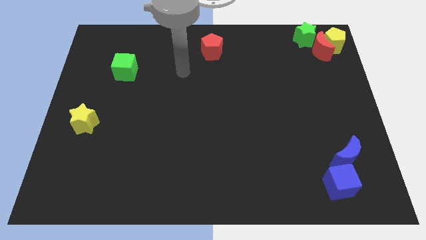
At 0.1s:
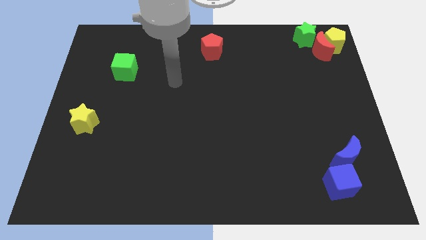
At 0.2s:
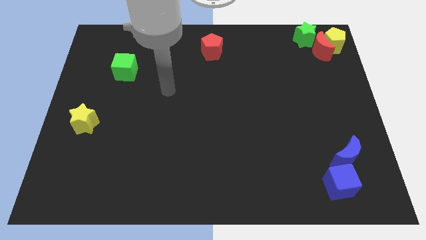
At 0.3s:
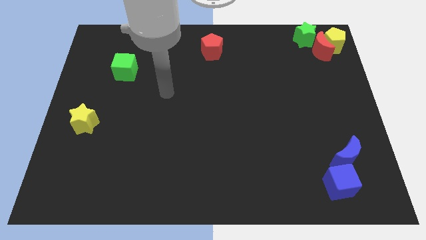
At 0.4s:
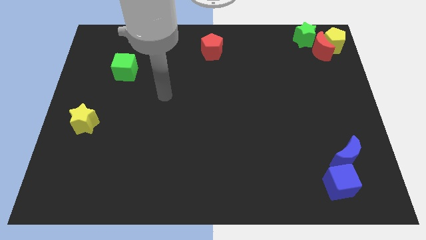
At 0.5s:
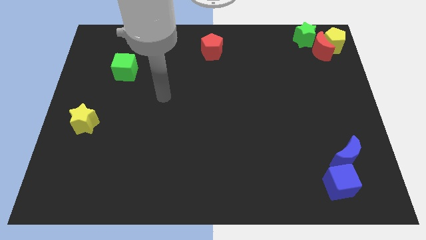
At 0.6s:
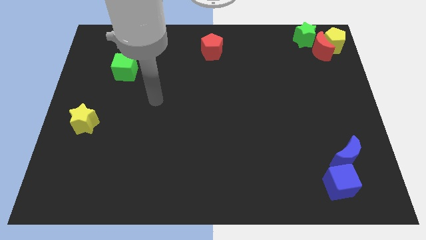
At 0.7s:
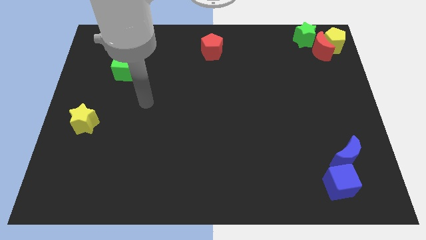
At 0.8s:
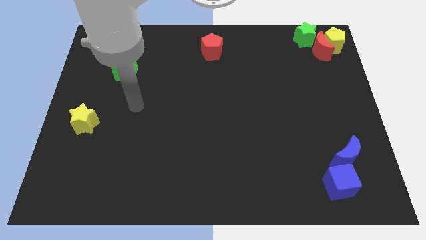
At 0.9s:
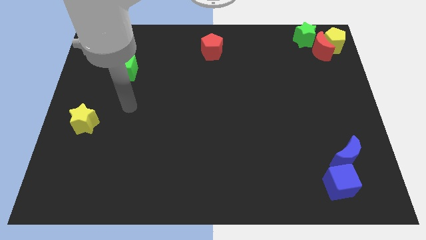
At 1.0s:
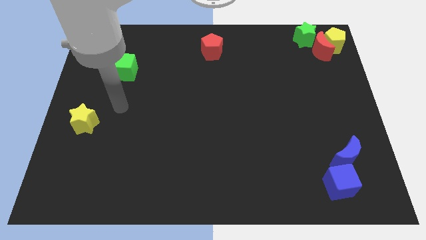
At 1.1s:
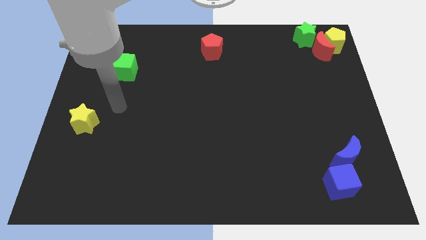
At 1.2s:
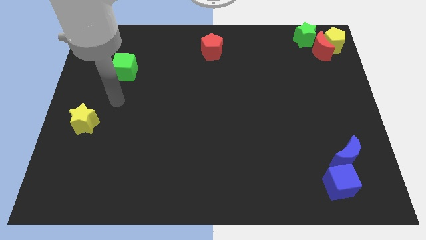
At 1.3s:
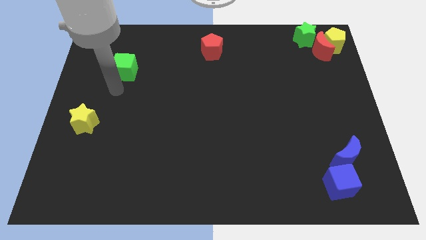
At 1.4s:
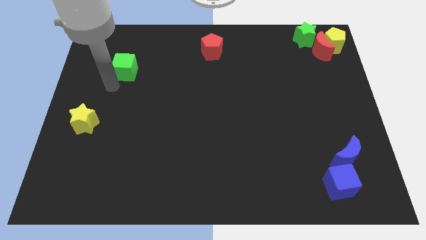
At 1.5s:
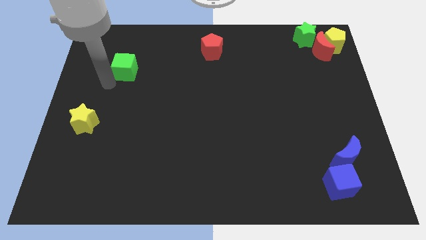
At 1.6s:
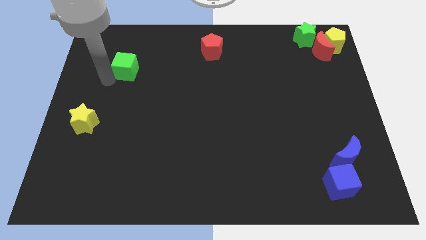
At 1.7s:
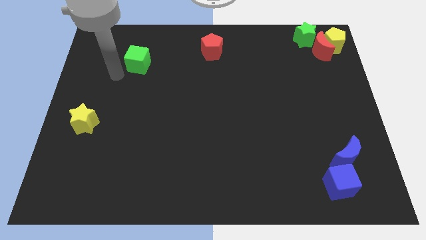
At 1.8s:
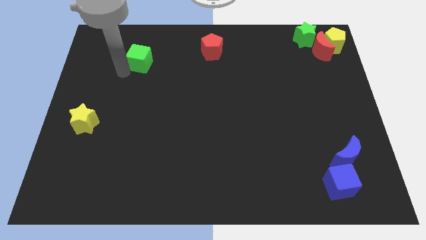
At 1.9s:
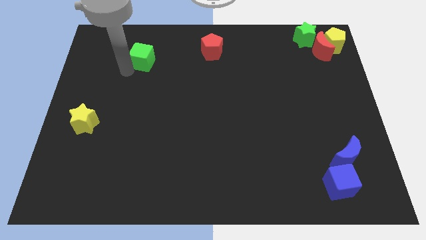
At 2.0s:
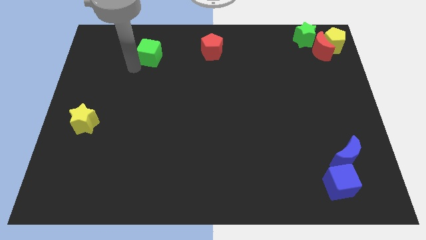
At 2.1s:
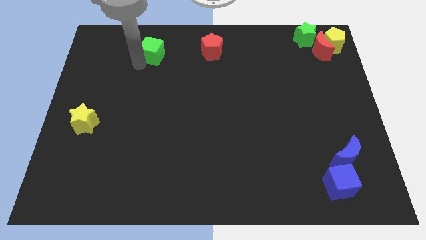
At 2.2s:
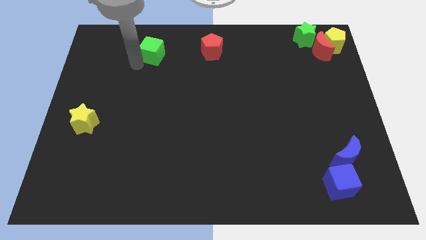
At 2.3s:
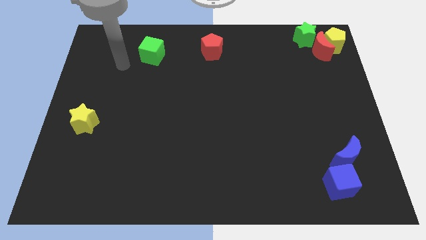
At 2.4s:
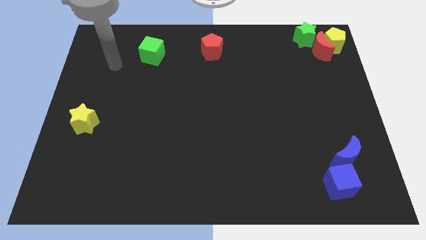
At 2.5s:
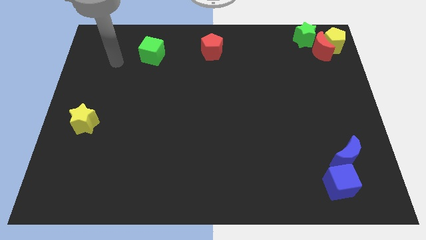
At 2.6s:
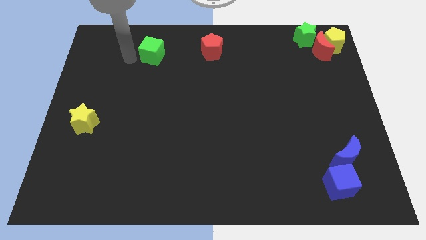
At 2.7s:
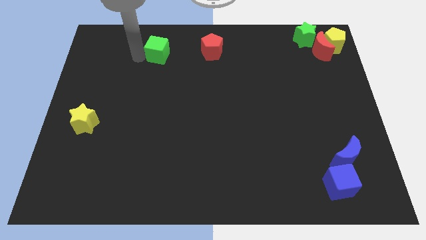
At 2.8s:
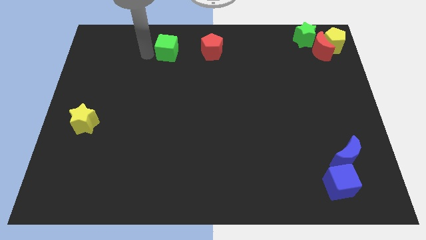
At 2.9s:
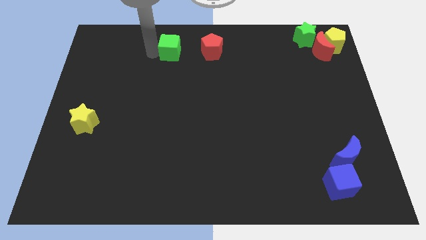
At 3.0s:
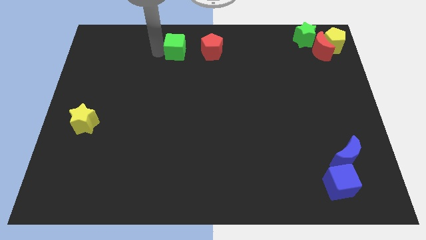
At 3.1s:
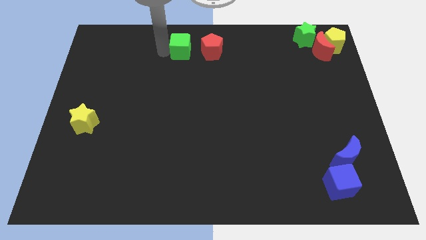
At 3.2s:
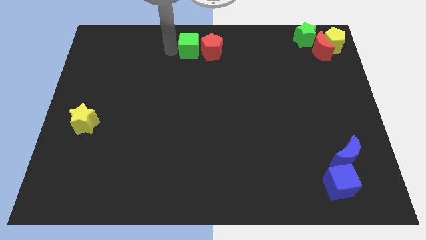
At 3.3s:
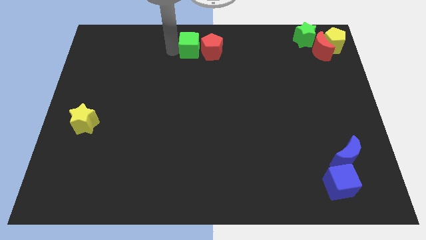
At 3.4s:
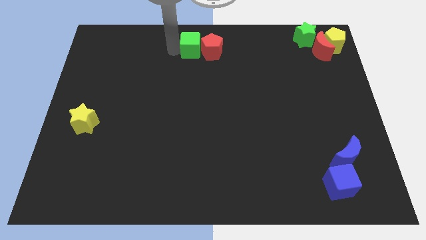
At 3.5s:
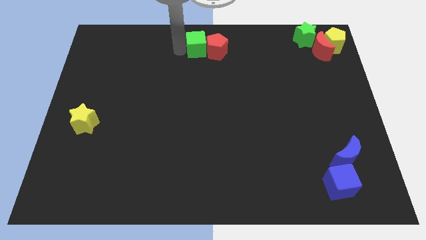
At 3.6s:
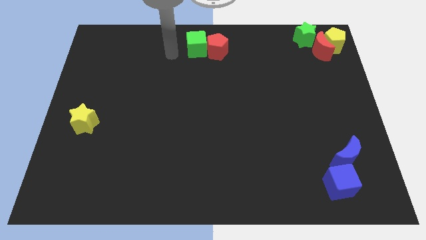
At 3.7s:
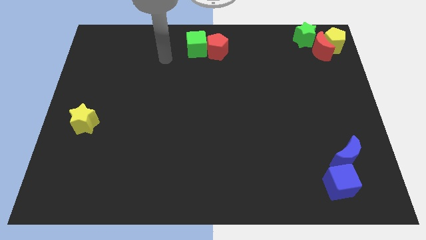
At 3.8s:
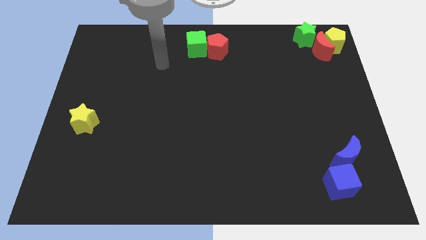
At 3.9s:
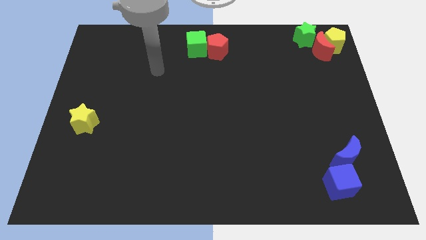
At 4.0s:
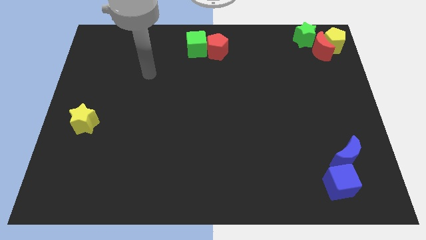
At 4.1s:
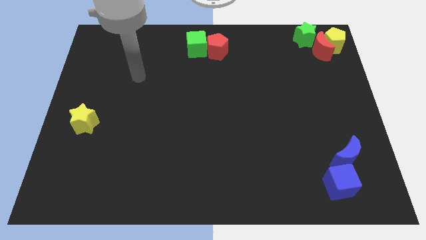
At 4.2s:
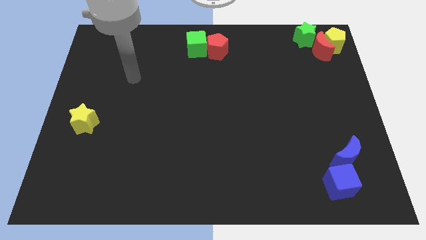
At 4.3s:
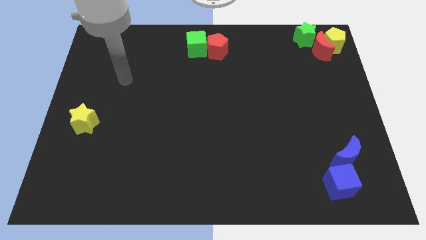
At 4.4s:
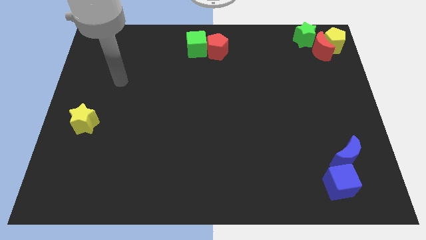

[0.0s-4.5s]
move the green cube to the left side of the red pentagon

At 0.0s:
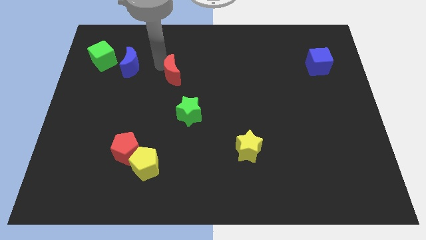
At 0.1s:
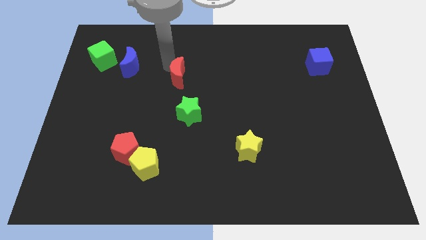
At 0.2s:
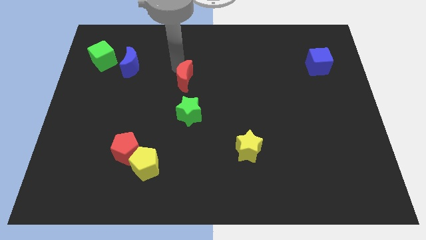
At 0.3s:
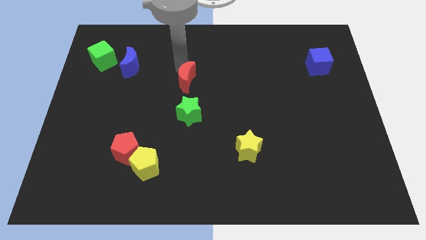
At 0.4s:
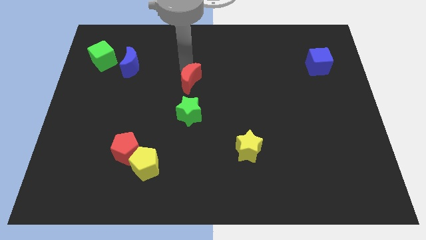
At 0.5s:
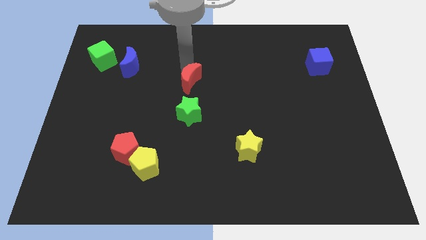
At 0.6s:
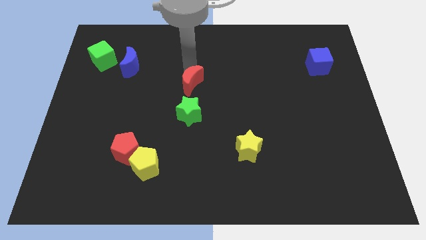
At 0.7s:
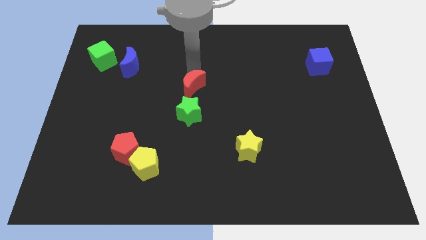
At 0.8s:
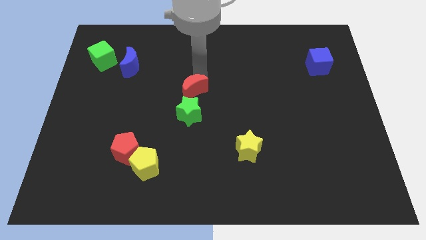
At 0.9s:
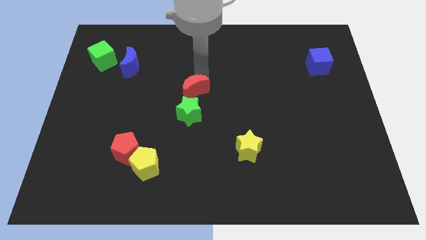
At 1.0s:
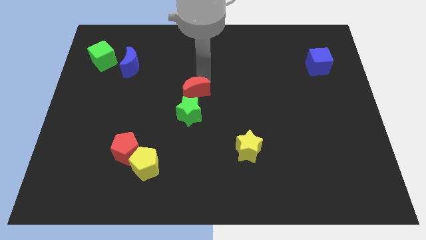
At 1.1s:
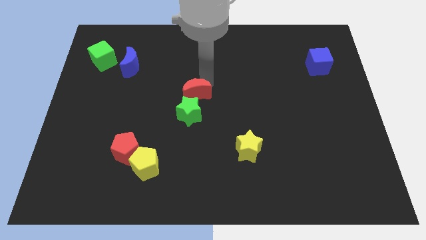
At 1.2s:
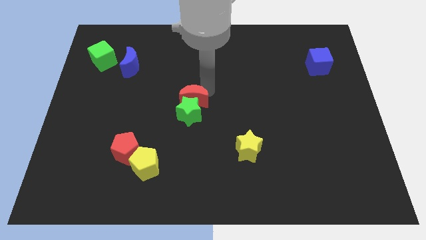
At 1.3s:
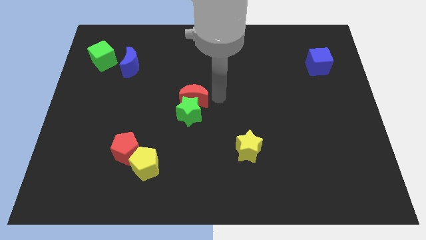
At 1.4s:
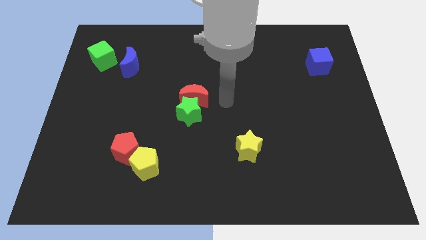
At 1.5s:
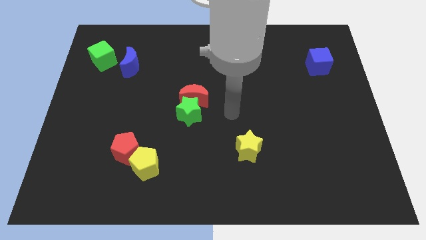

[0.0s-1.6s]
push the red crescent into the green star

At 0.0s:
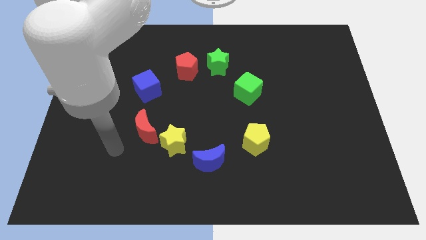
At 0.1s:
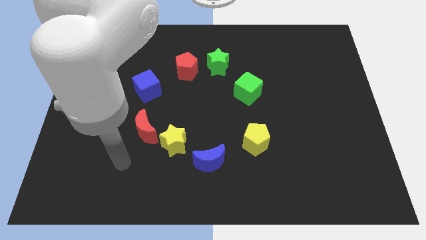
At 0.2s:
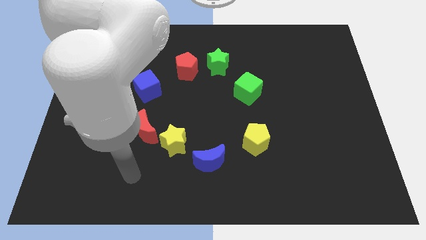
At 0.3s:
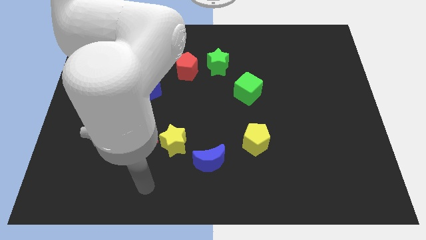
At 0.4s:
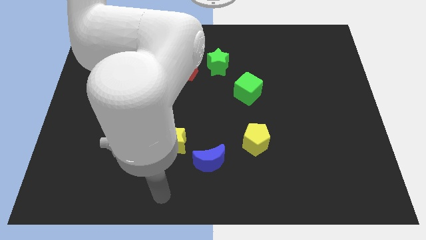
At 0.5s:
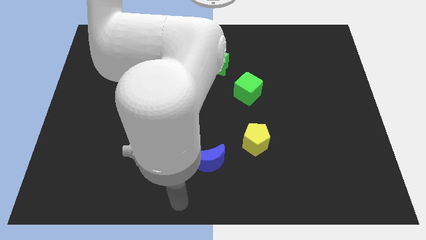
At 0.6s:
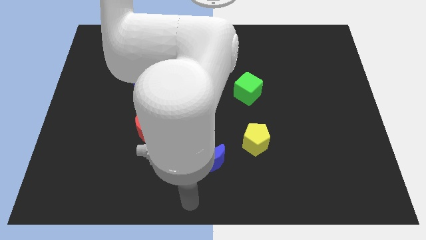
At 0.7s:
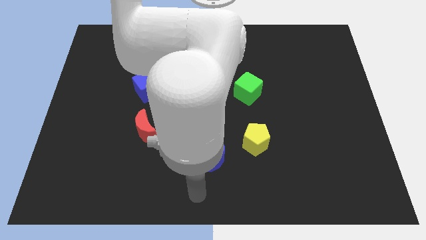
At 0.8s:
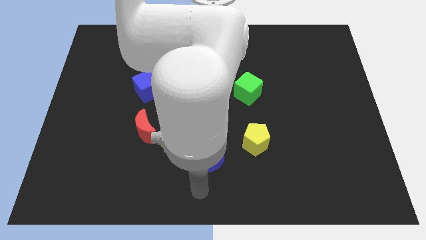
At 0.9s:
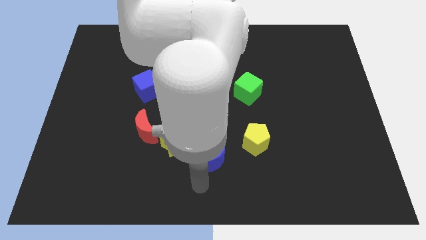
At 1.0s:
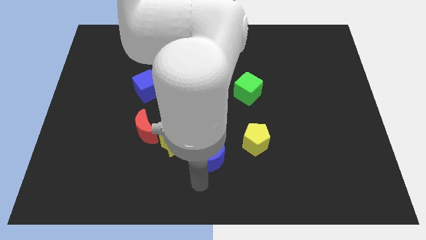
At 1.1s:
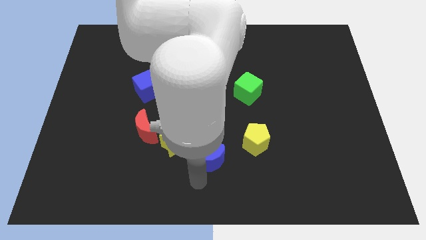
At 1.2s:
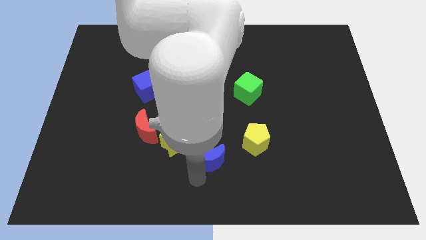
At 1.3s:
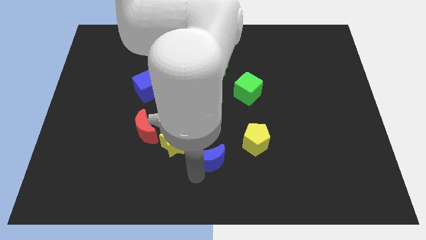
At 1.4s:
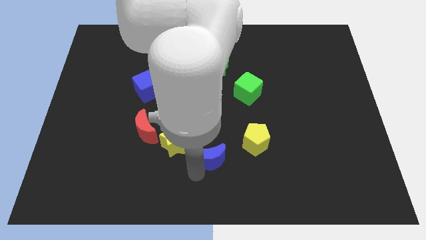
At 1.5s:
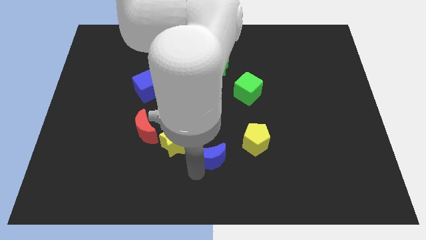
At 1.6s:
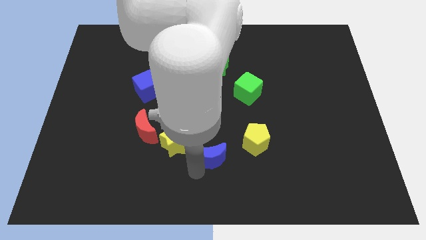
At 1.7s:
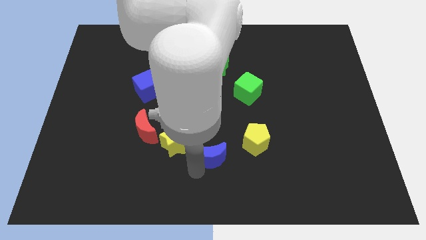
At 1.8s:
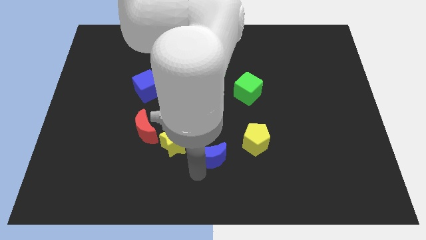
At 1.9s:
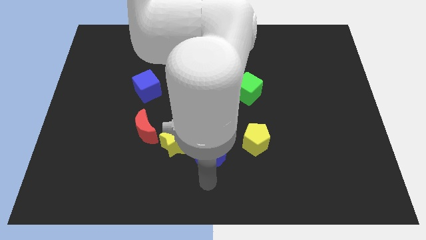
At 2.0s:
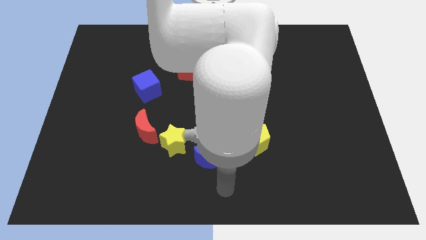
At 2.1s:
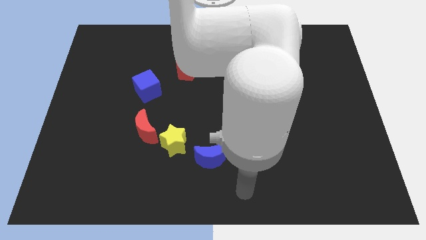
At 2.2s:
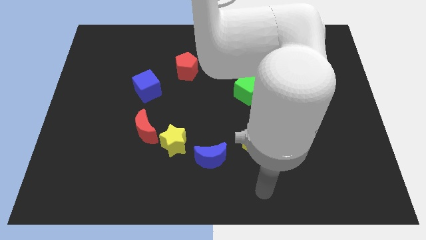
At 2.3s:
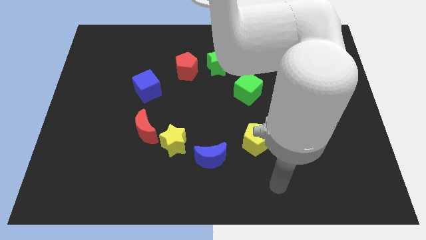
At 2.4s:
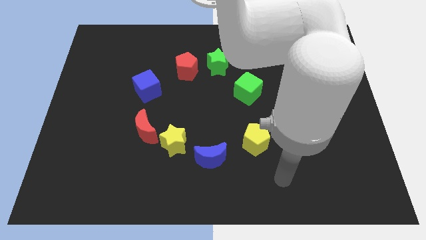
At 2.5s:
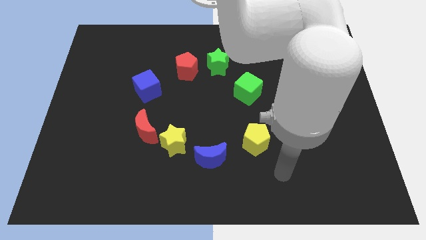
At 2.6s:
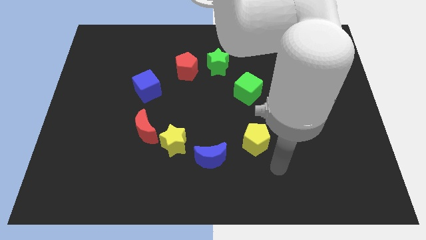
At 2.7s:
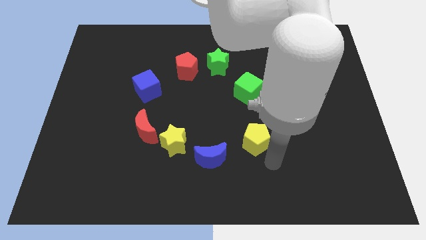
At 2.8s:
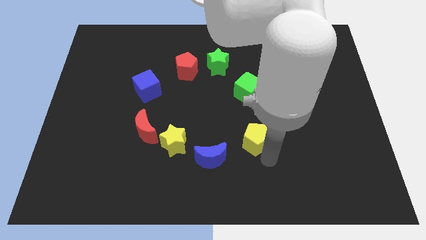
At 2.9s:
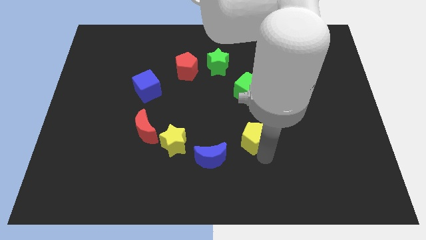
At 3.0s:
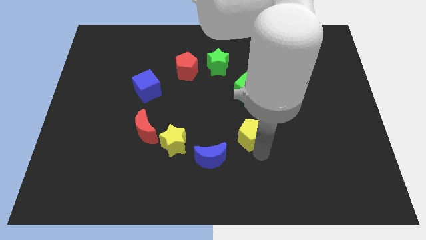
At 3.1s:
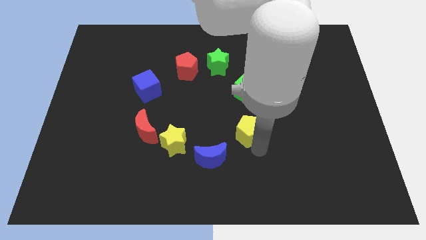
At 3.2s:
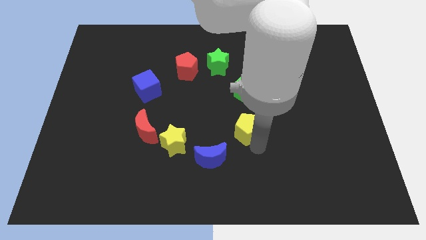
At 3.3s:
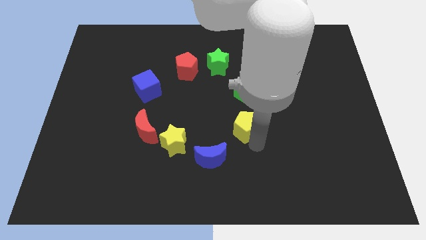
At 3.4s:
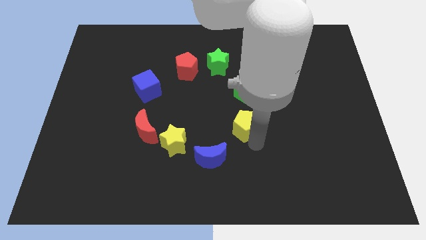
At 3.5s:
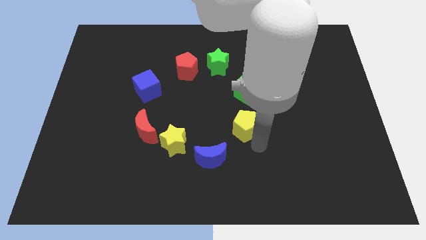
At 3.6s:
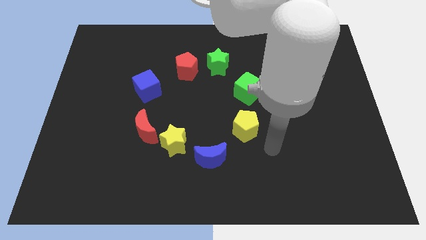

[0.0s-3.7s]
slightly push the blue moon and yellow pentagon towards the center
